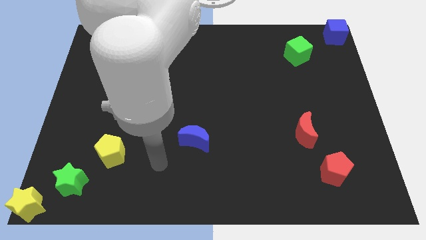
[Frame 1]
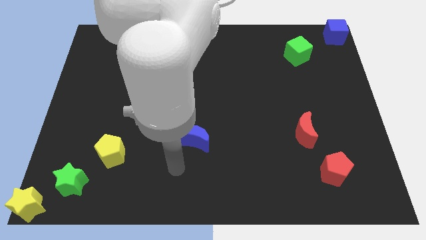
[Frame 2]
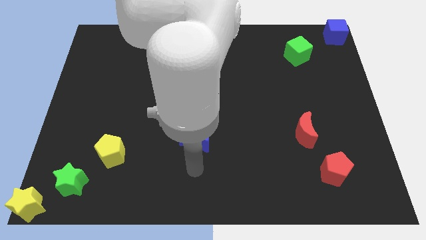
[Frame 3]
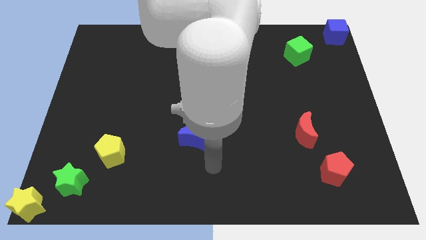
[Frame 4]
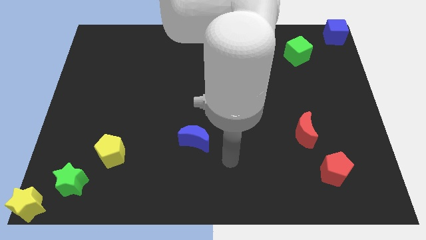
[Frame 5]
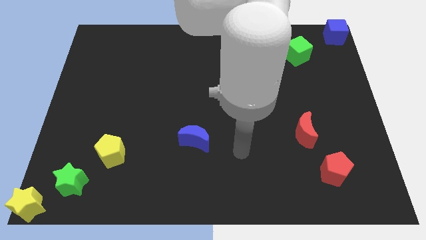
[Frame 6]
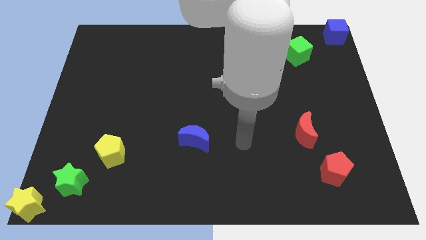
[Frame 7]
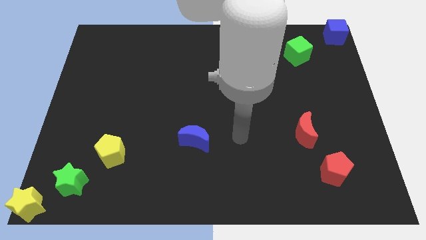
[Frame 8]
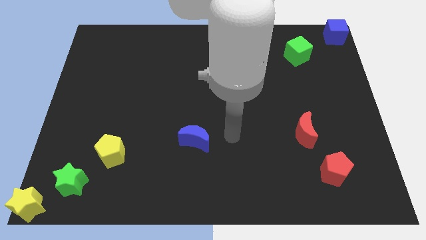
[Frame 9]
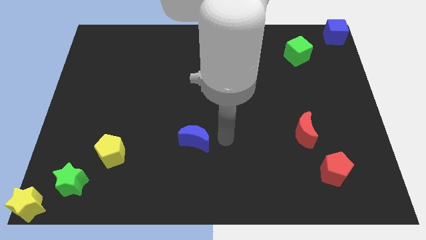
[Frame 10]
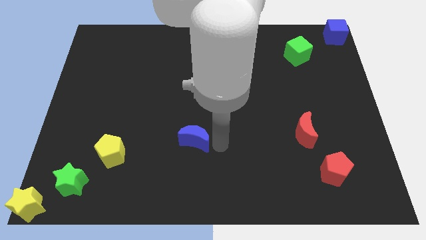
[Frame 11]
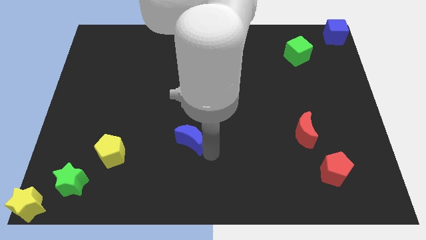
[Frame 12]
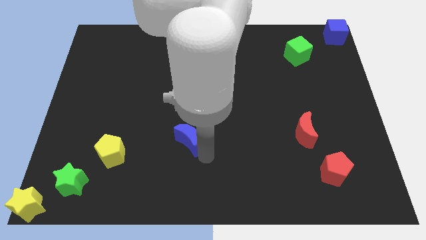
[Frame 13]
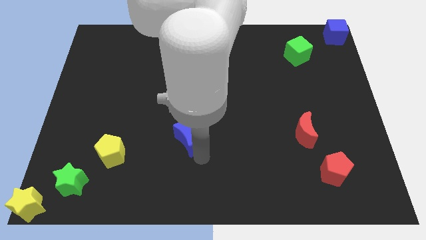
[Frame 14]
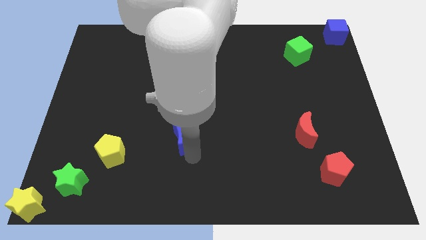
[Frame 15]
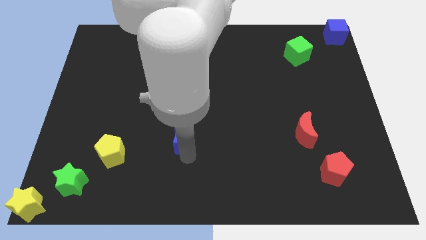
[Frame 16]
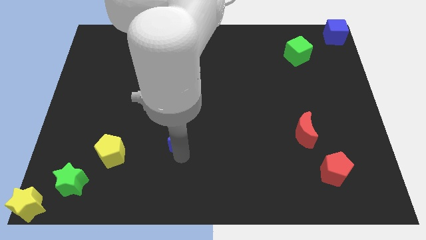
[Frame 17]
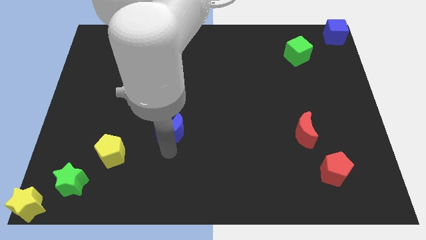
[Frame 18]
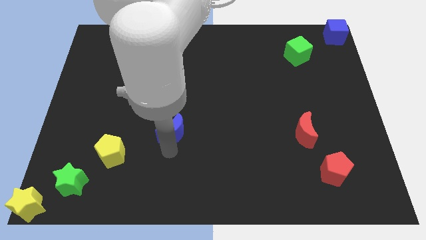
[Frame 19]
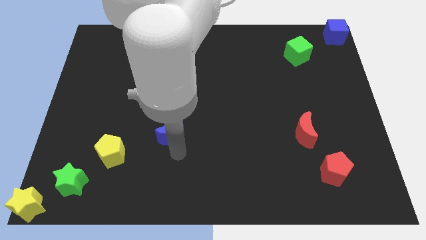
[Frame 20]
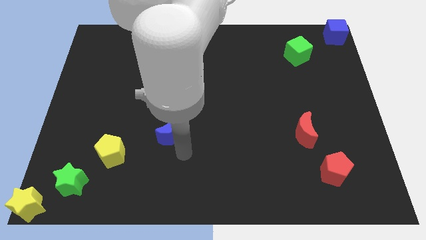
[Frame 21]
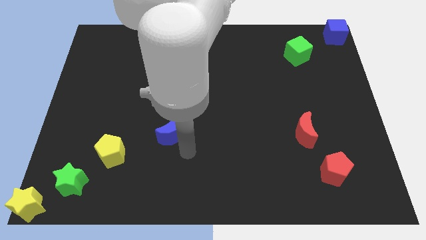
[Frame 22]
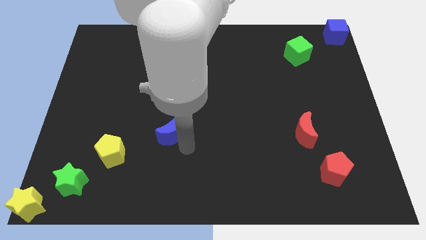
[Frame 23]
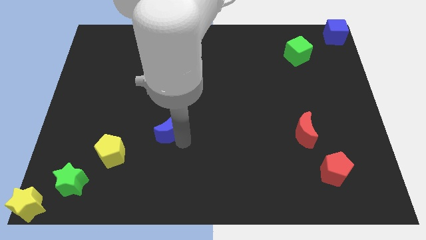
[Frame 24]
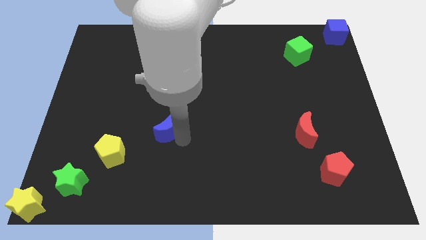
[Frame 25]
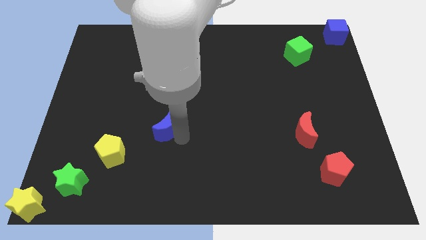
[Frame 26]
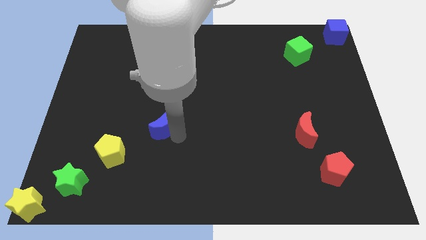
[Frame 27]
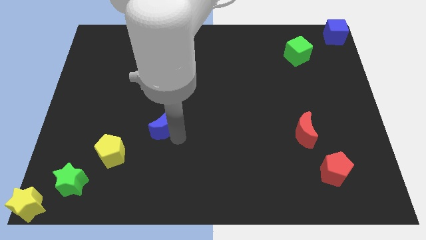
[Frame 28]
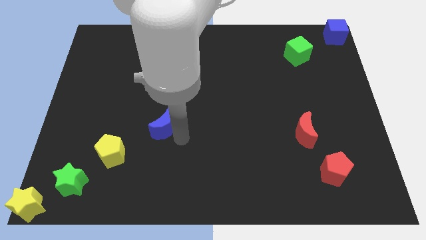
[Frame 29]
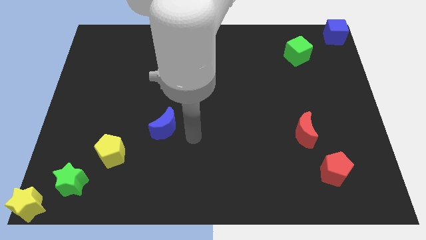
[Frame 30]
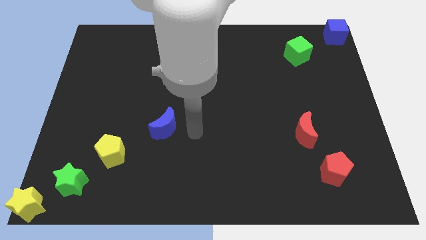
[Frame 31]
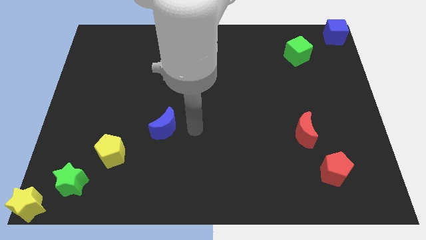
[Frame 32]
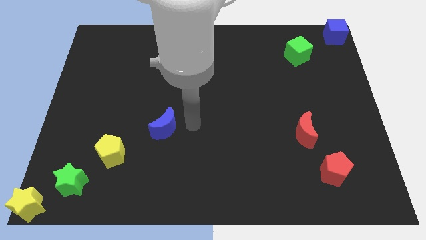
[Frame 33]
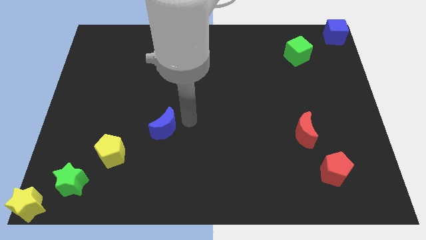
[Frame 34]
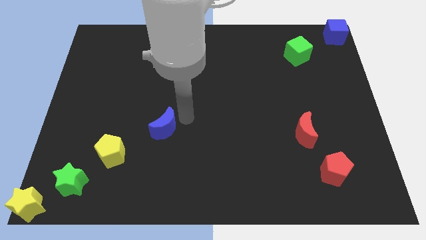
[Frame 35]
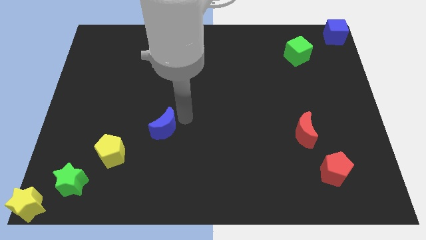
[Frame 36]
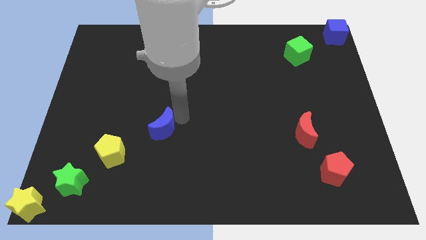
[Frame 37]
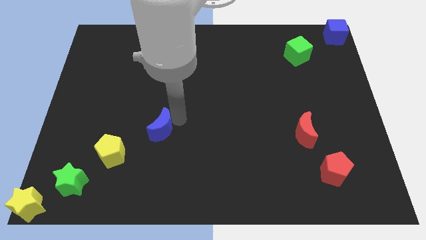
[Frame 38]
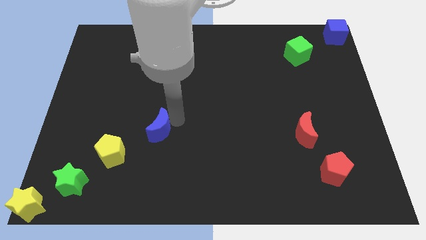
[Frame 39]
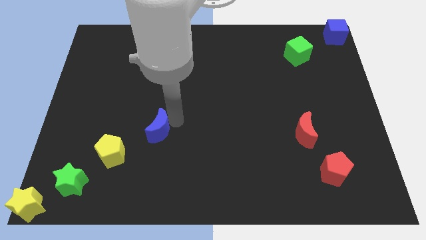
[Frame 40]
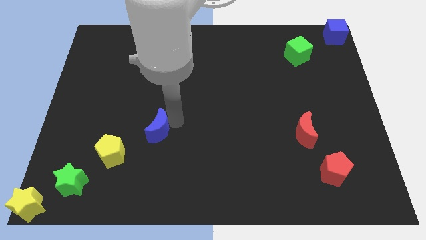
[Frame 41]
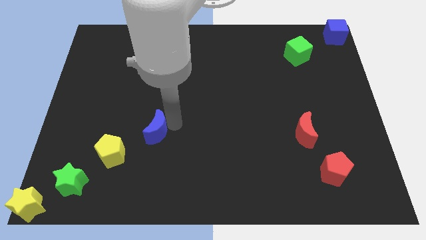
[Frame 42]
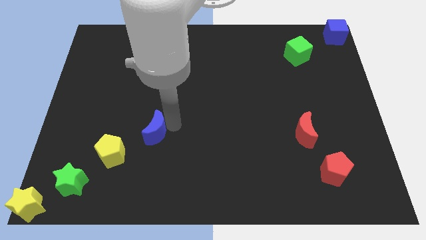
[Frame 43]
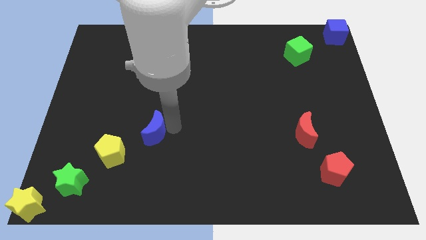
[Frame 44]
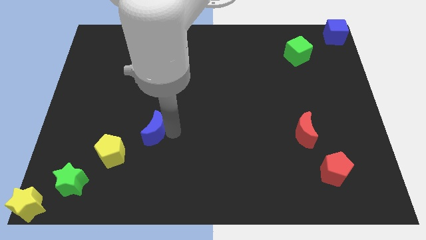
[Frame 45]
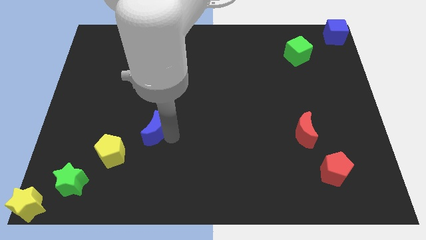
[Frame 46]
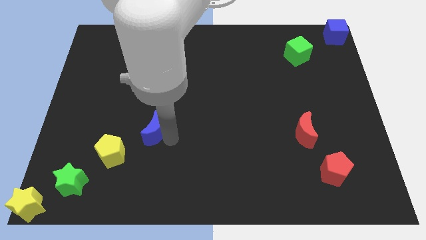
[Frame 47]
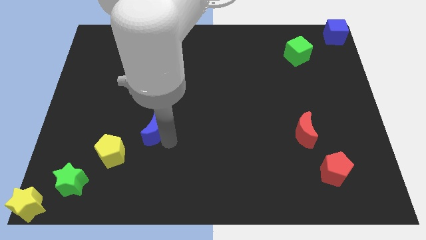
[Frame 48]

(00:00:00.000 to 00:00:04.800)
push the blue crescent to the right of the yellow pentagon

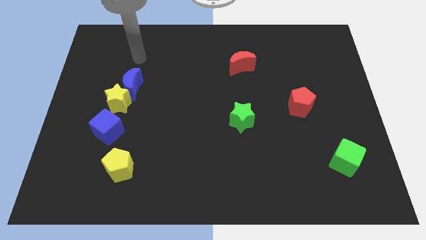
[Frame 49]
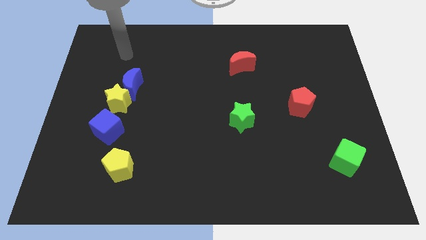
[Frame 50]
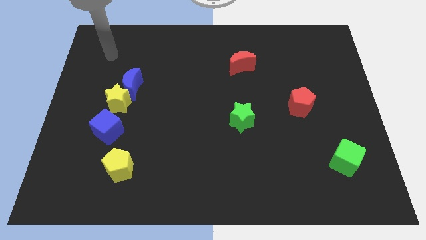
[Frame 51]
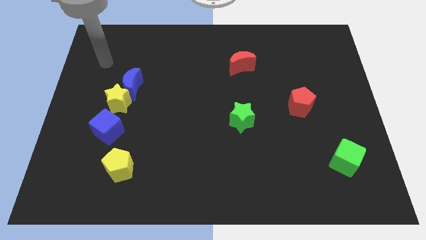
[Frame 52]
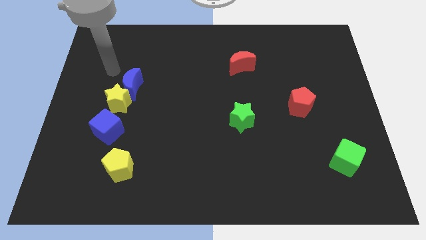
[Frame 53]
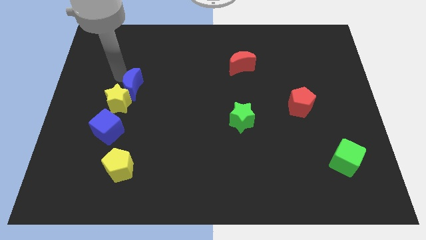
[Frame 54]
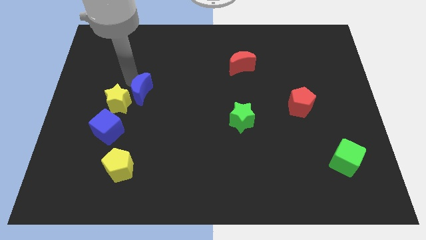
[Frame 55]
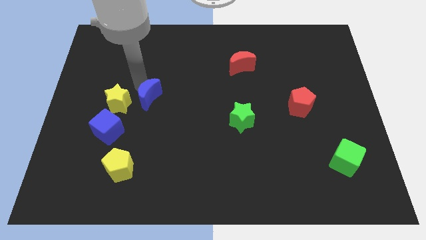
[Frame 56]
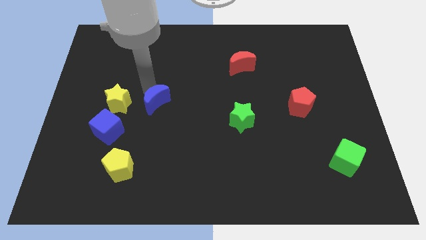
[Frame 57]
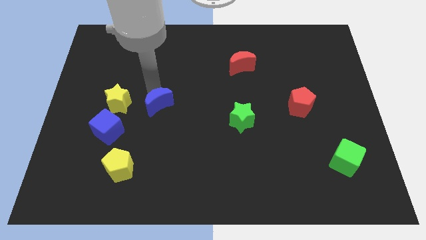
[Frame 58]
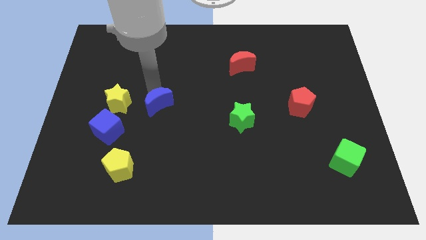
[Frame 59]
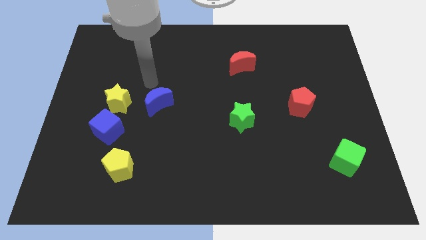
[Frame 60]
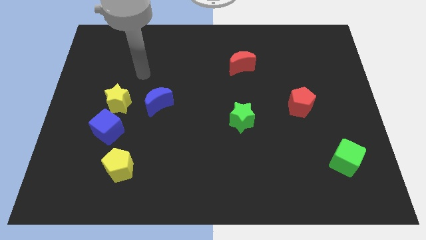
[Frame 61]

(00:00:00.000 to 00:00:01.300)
move blue moon to the right of yellow star

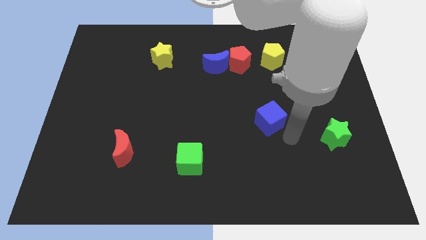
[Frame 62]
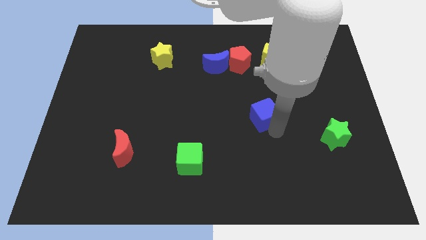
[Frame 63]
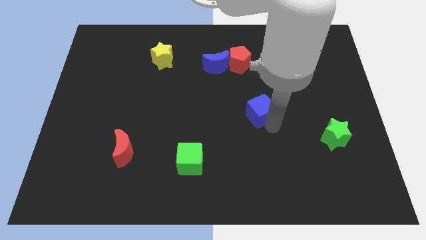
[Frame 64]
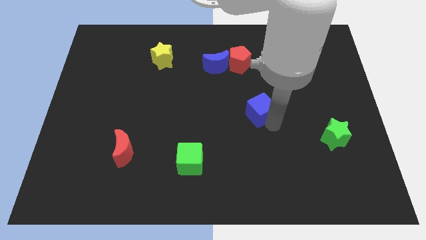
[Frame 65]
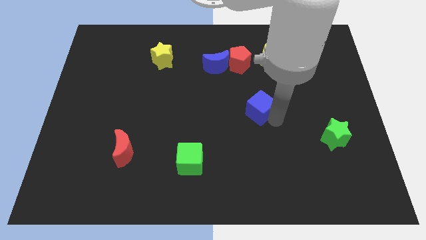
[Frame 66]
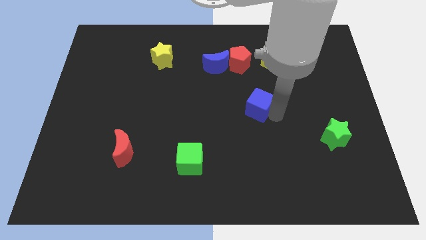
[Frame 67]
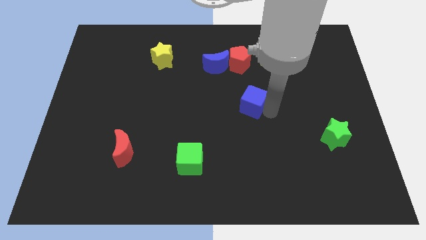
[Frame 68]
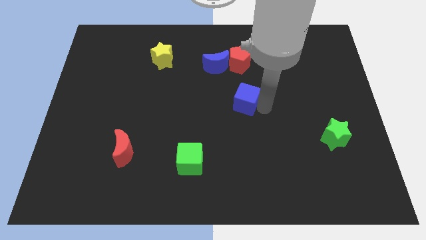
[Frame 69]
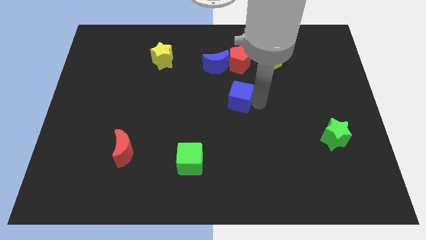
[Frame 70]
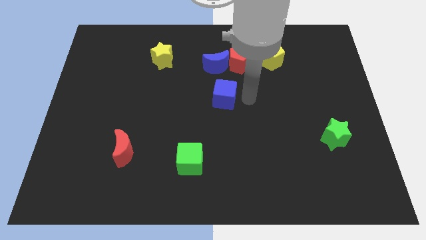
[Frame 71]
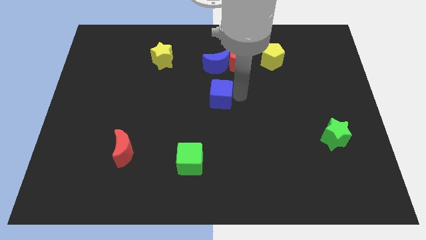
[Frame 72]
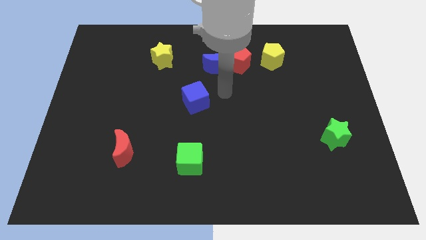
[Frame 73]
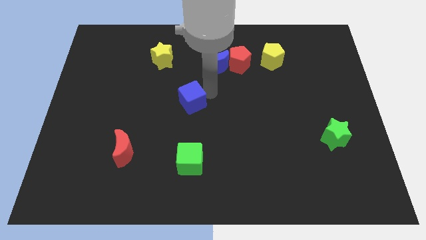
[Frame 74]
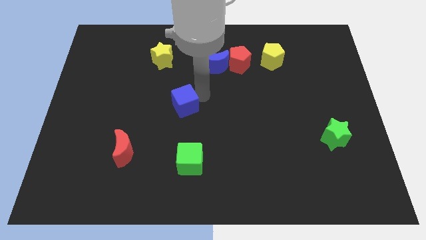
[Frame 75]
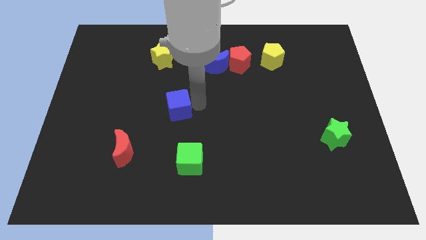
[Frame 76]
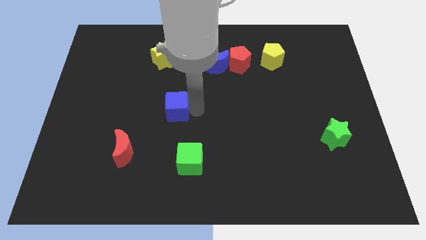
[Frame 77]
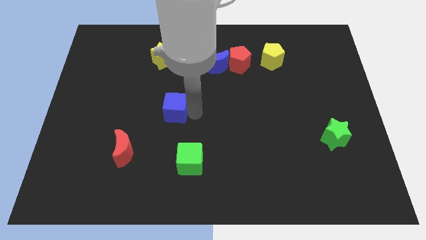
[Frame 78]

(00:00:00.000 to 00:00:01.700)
move the blue cube towards left

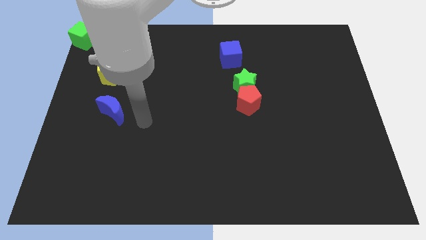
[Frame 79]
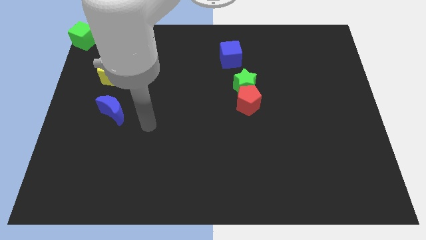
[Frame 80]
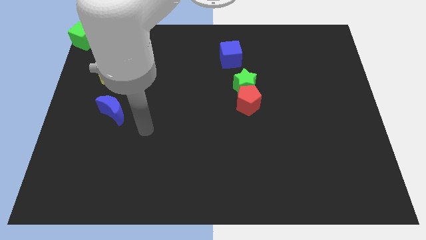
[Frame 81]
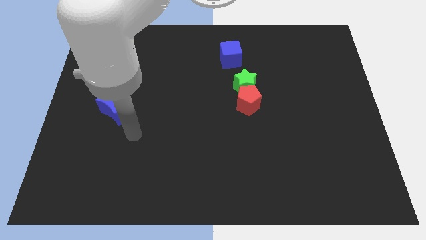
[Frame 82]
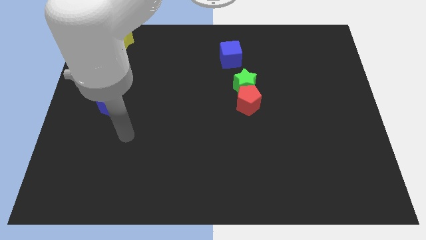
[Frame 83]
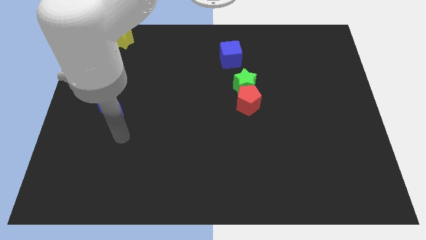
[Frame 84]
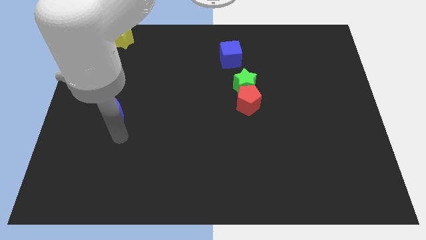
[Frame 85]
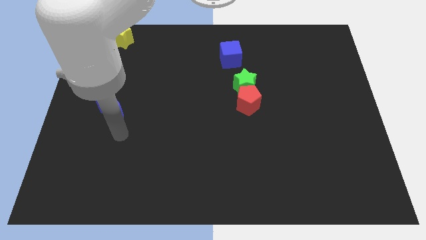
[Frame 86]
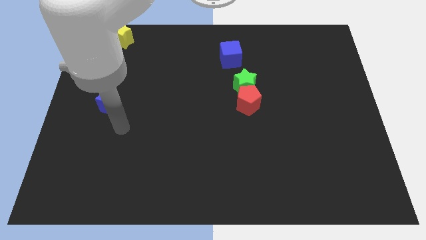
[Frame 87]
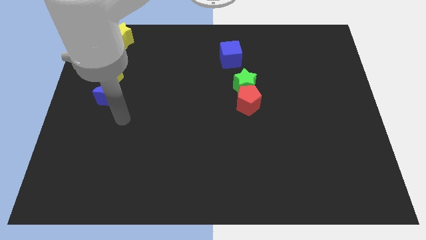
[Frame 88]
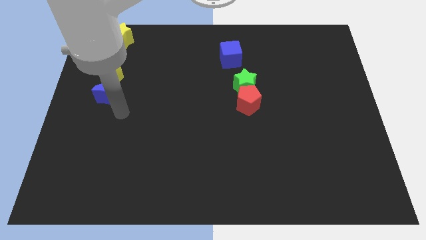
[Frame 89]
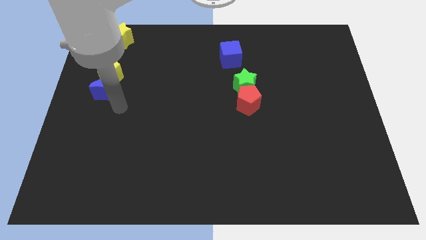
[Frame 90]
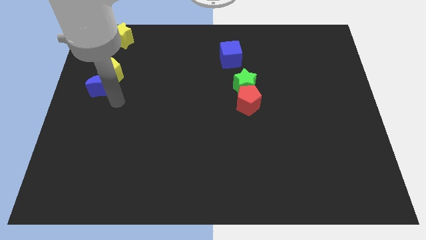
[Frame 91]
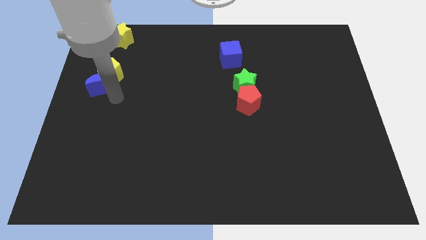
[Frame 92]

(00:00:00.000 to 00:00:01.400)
push the blue moon into the yellow pentagon
